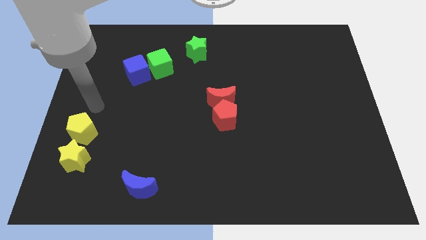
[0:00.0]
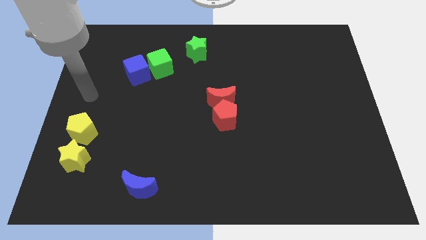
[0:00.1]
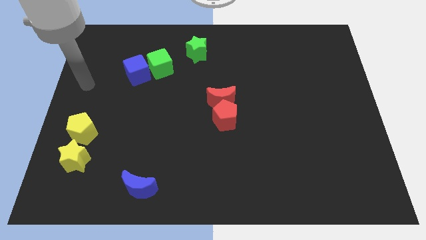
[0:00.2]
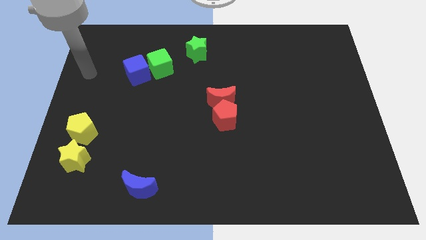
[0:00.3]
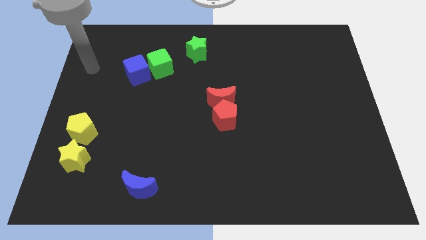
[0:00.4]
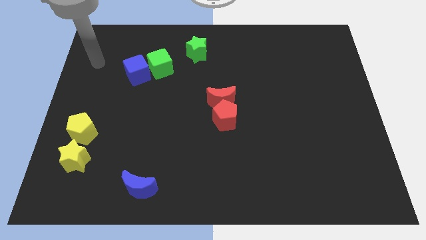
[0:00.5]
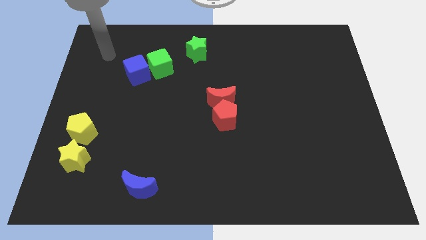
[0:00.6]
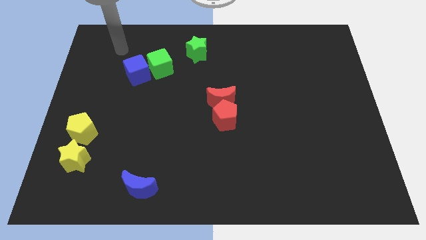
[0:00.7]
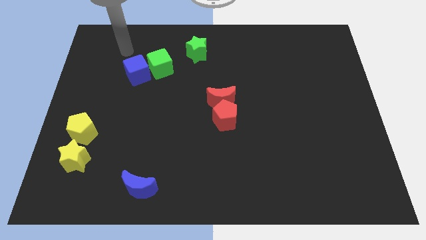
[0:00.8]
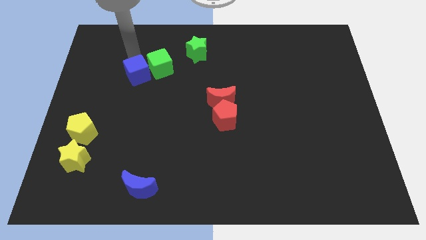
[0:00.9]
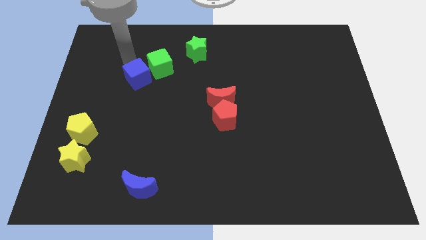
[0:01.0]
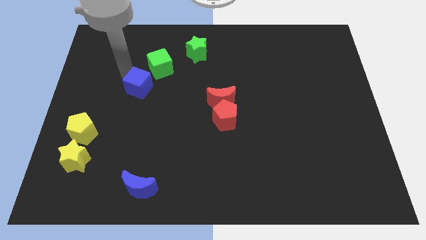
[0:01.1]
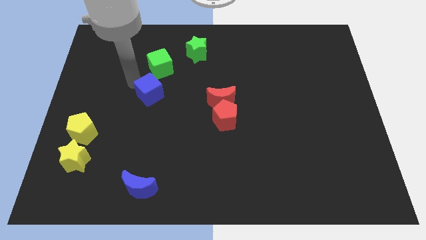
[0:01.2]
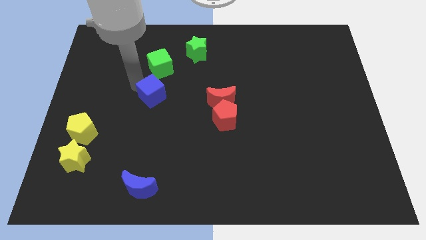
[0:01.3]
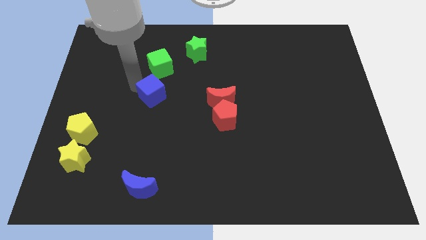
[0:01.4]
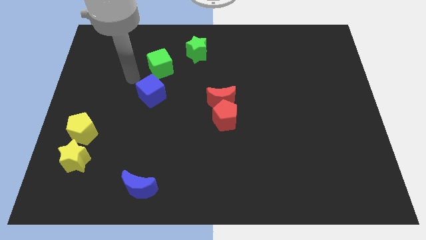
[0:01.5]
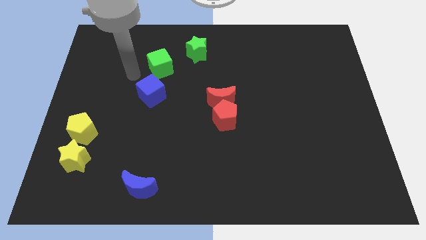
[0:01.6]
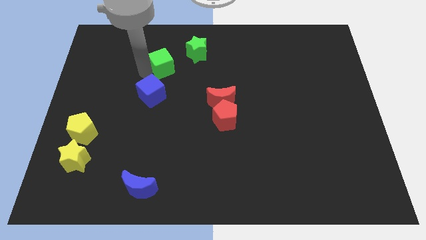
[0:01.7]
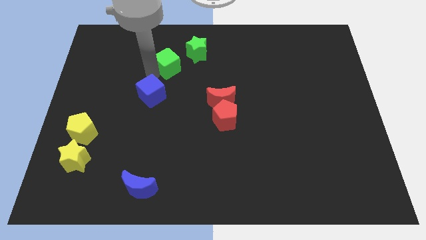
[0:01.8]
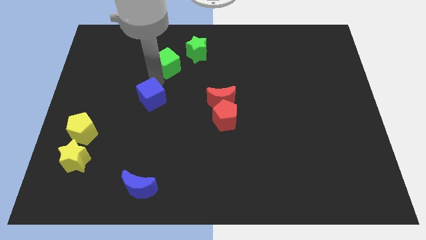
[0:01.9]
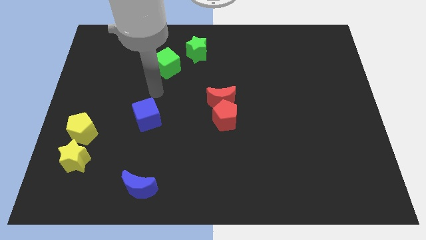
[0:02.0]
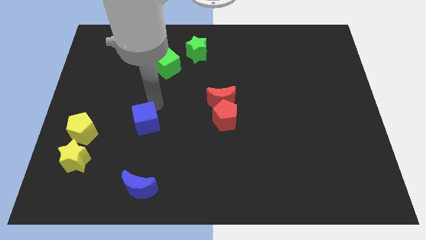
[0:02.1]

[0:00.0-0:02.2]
place the blue cube in between the red pentagon and yellow pentagon

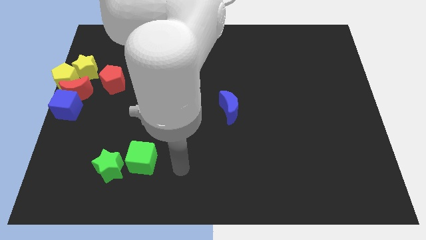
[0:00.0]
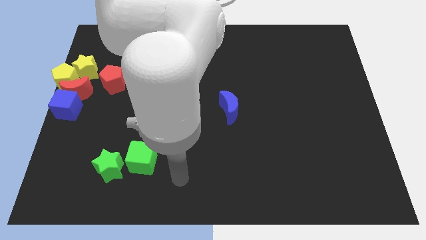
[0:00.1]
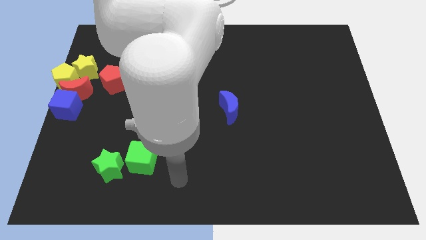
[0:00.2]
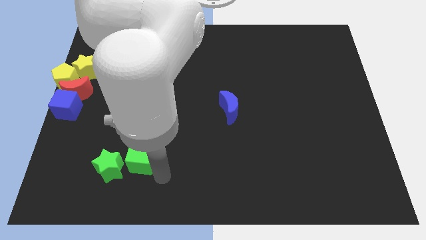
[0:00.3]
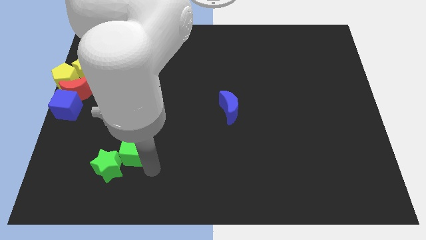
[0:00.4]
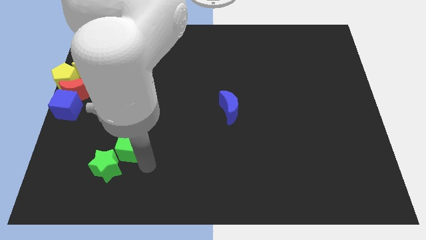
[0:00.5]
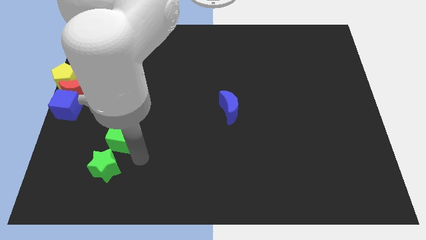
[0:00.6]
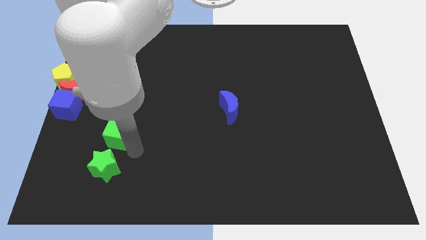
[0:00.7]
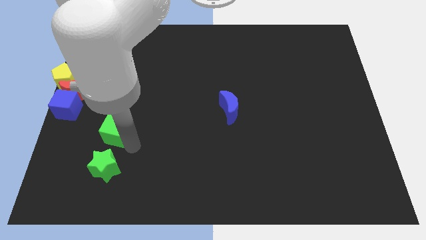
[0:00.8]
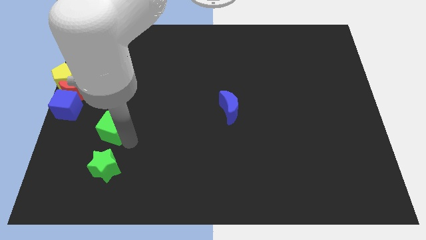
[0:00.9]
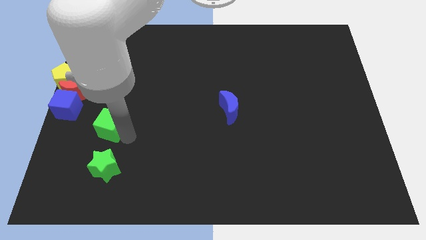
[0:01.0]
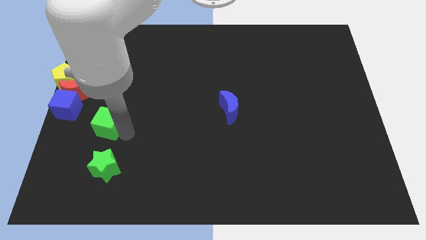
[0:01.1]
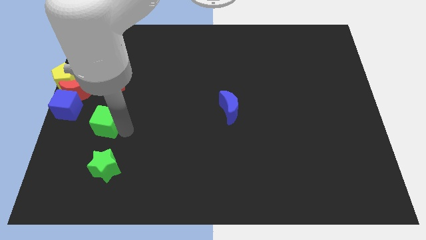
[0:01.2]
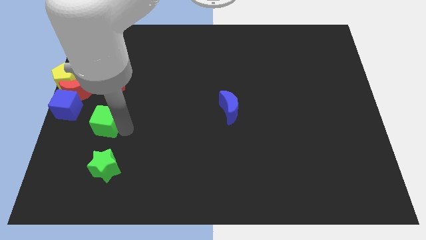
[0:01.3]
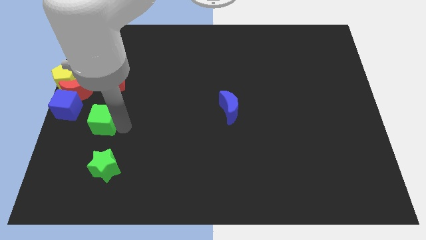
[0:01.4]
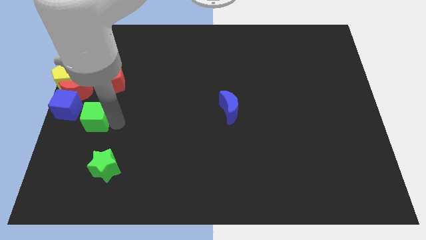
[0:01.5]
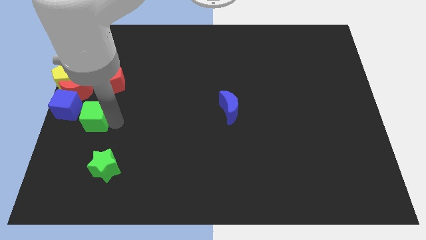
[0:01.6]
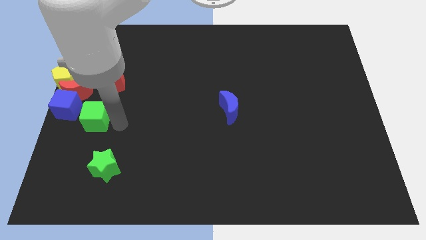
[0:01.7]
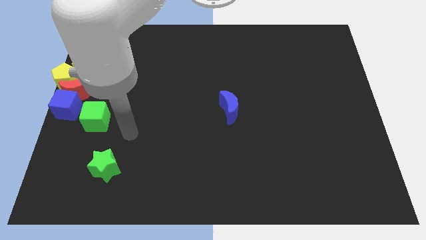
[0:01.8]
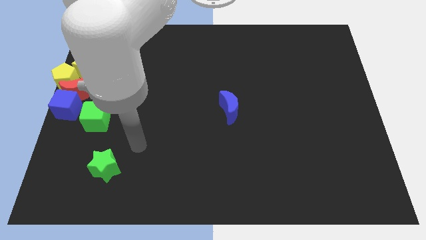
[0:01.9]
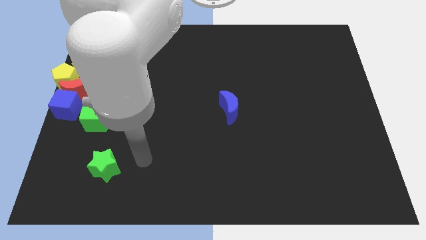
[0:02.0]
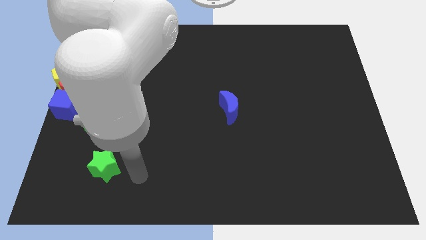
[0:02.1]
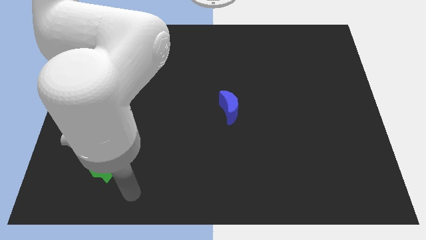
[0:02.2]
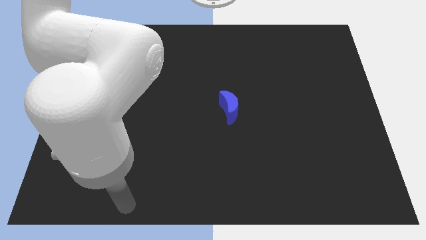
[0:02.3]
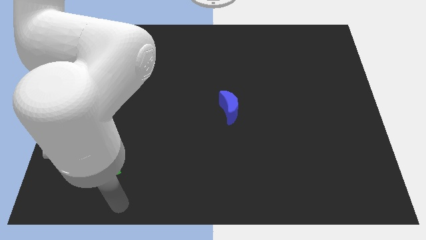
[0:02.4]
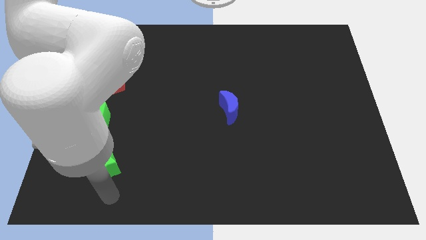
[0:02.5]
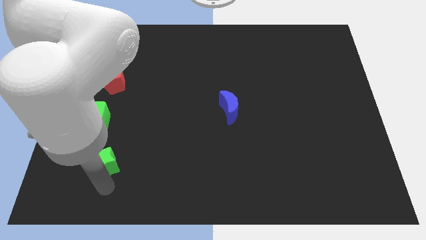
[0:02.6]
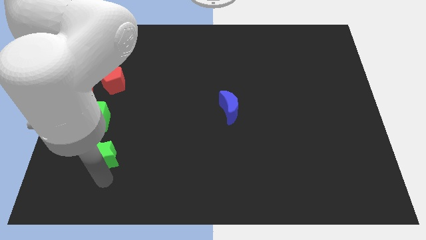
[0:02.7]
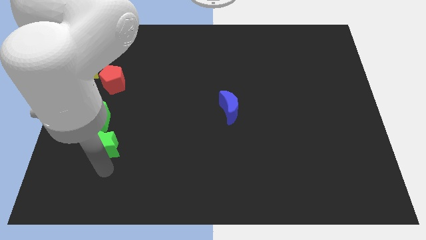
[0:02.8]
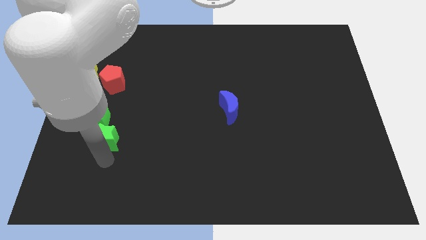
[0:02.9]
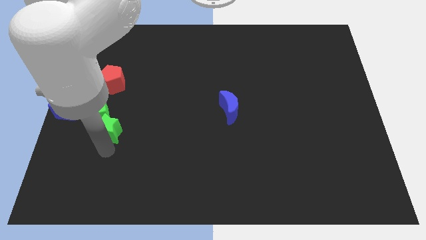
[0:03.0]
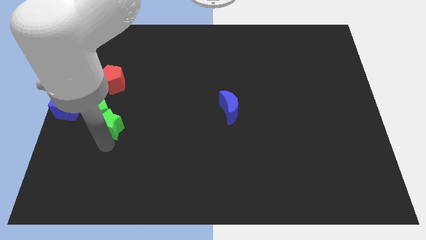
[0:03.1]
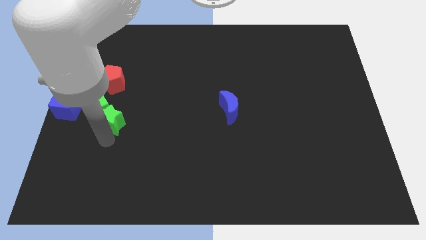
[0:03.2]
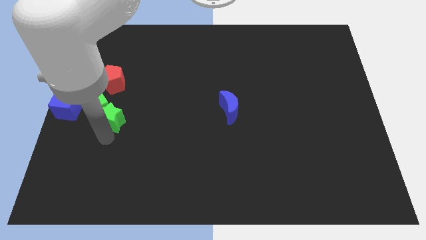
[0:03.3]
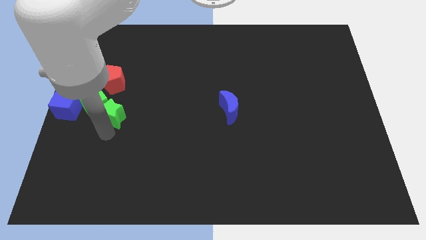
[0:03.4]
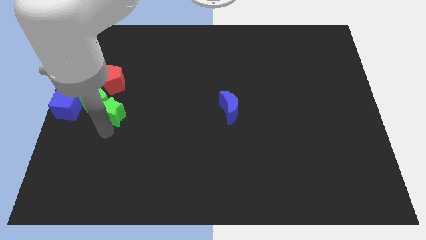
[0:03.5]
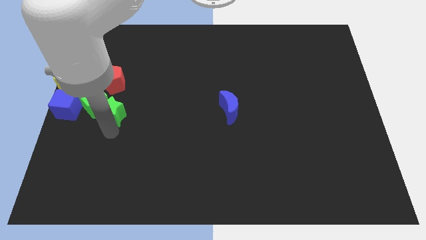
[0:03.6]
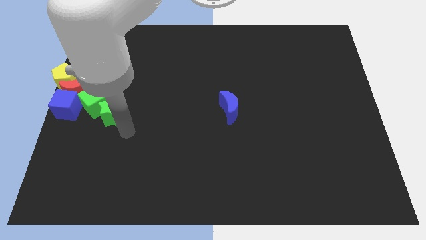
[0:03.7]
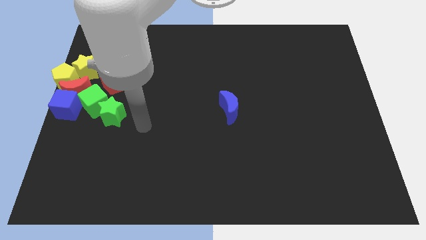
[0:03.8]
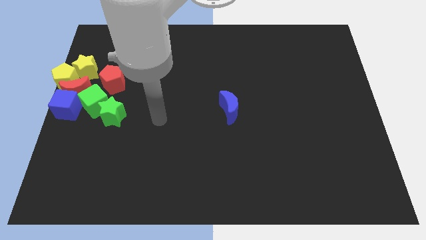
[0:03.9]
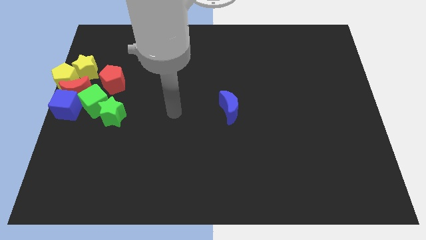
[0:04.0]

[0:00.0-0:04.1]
drag both the green blocks towards the center left side of the board

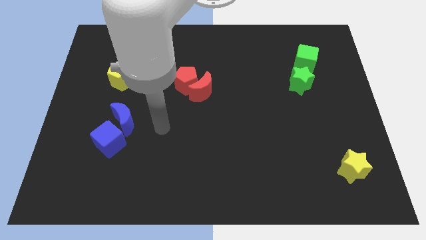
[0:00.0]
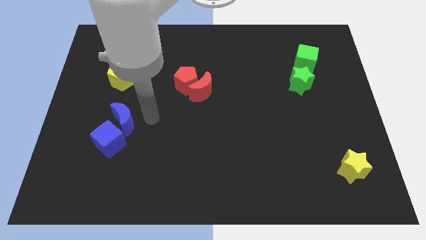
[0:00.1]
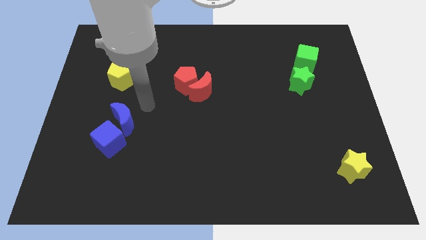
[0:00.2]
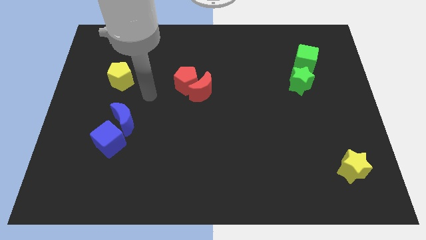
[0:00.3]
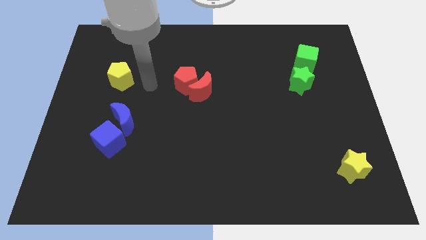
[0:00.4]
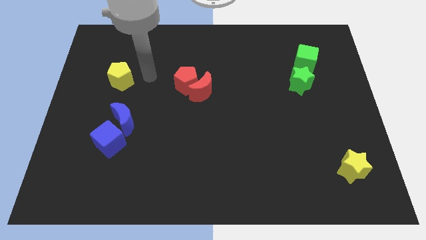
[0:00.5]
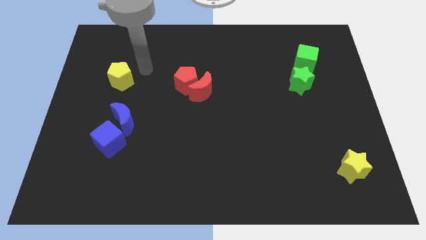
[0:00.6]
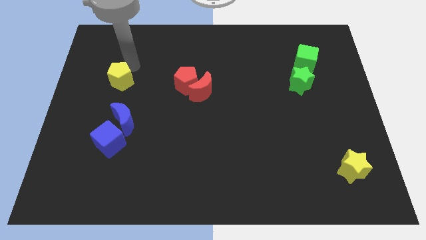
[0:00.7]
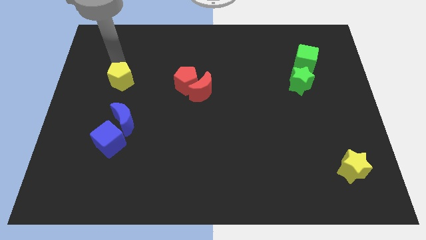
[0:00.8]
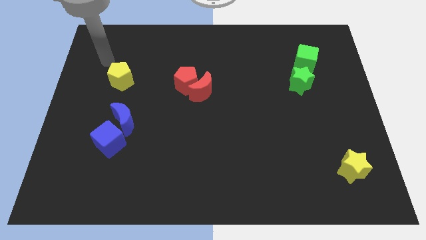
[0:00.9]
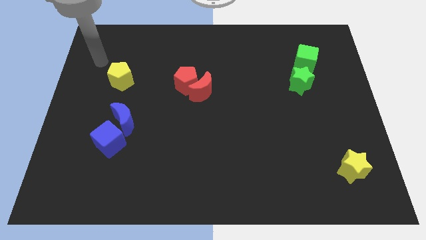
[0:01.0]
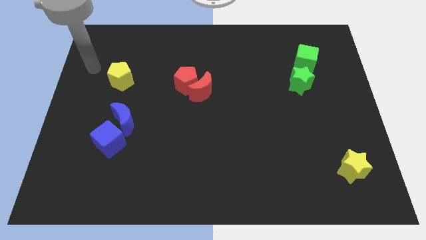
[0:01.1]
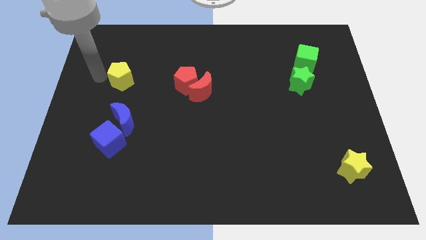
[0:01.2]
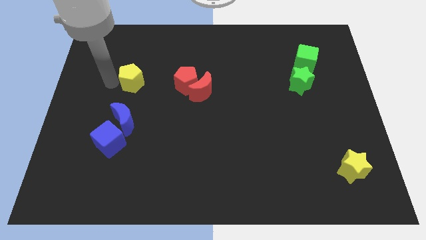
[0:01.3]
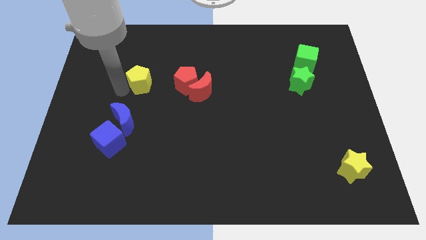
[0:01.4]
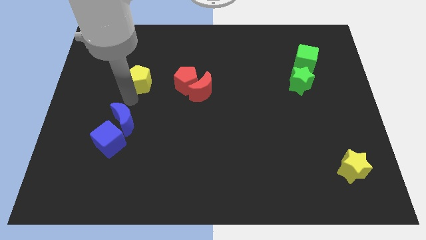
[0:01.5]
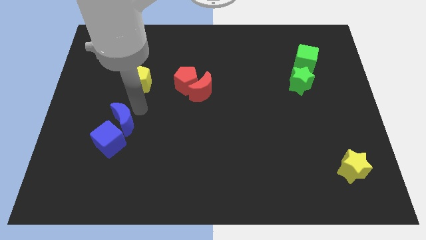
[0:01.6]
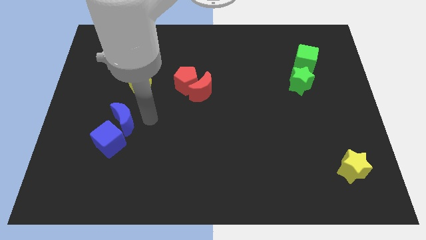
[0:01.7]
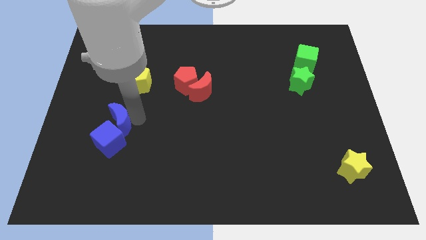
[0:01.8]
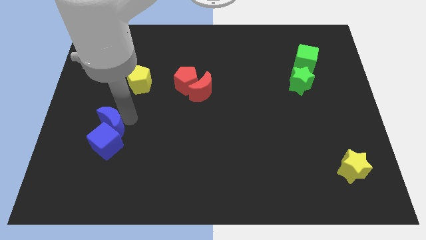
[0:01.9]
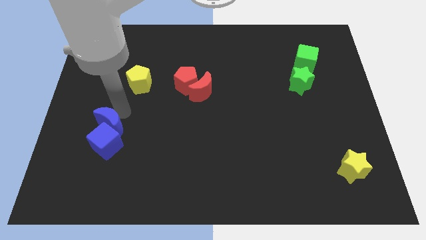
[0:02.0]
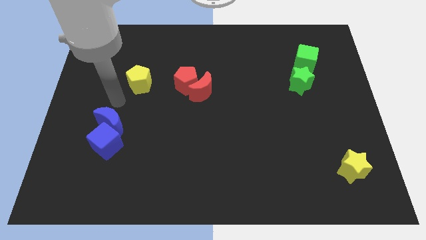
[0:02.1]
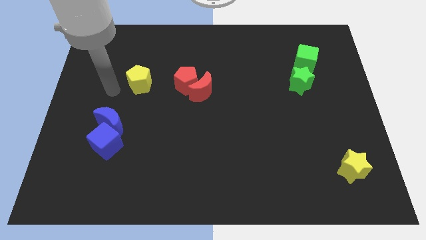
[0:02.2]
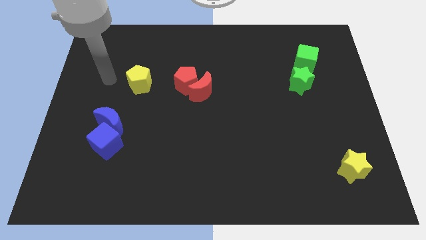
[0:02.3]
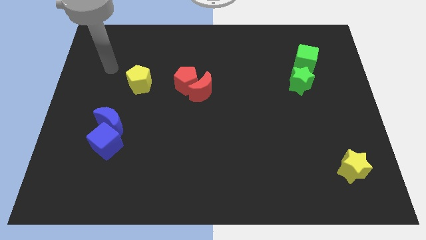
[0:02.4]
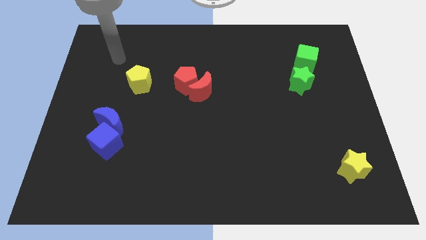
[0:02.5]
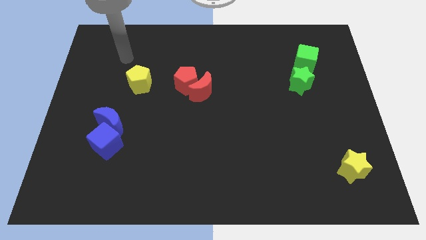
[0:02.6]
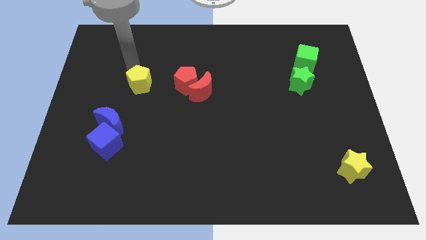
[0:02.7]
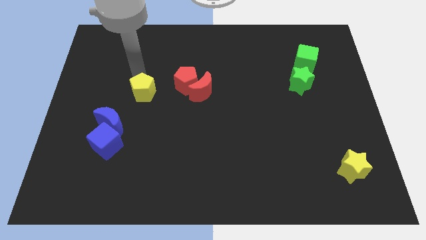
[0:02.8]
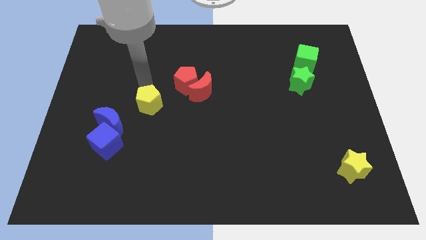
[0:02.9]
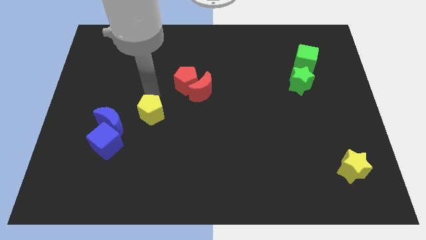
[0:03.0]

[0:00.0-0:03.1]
place yellow pentagon in between red and blue moons
